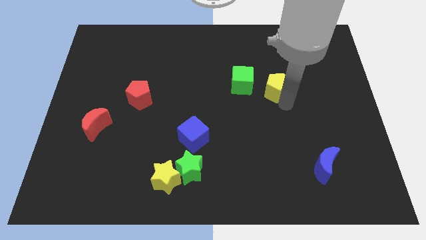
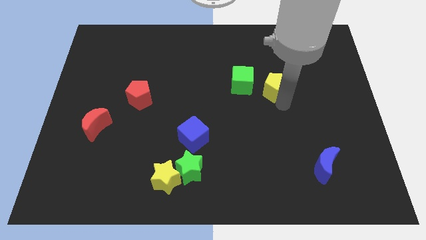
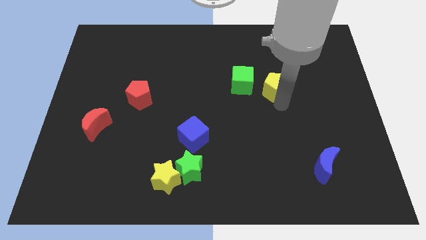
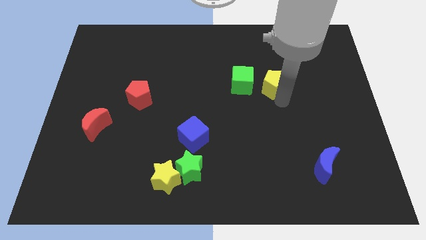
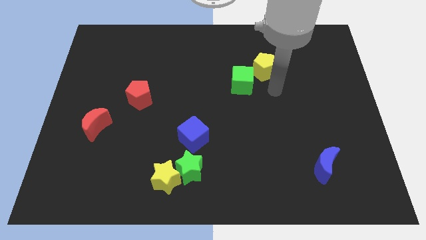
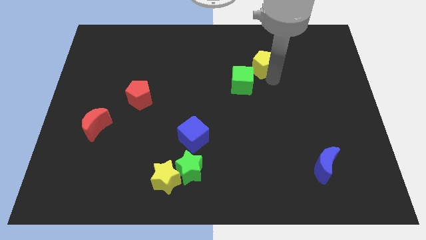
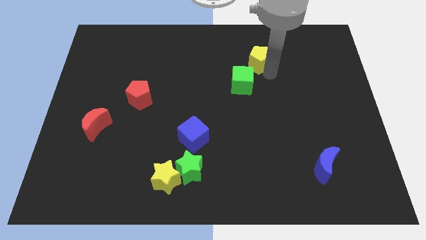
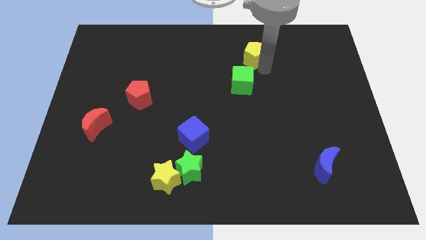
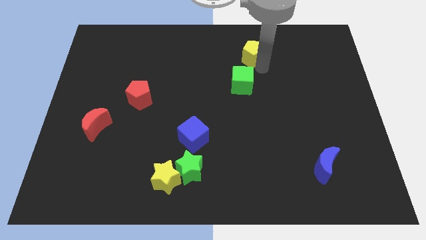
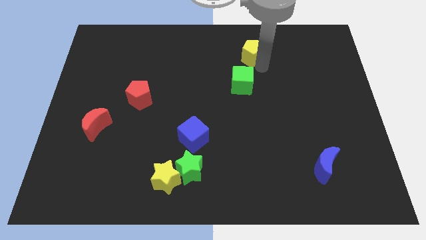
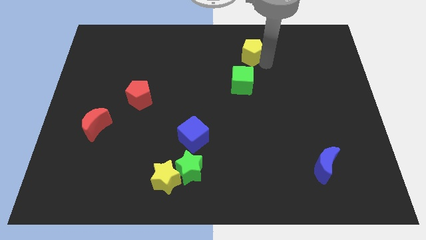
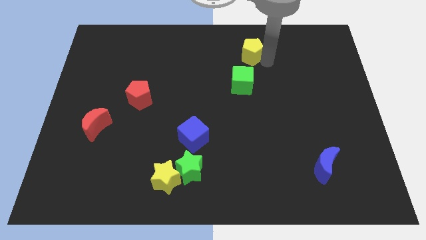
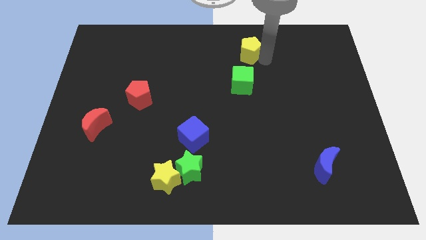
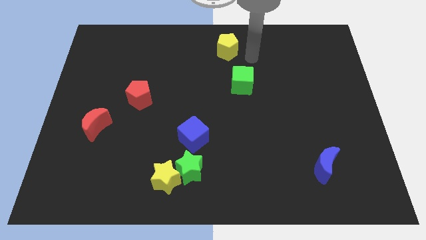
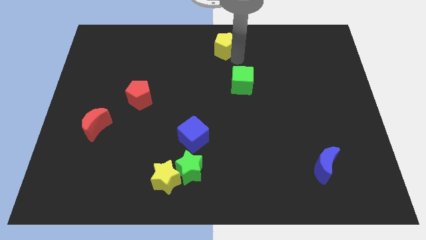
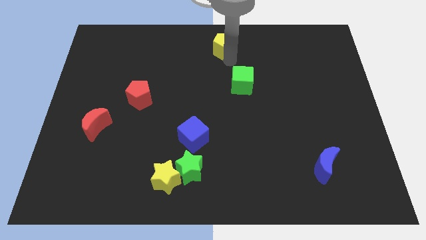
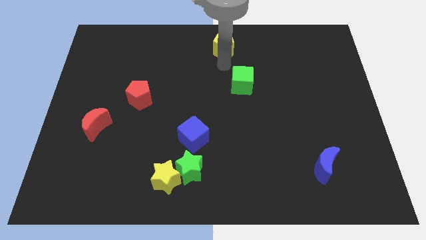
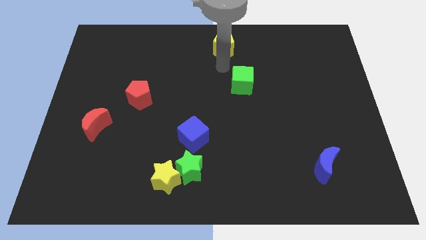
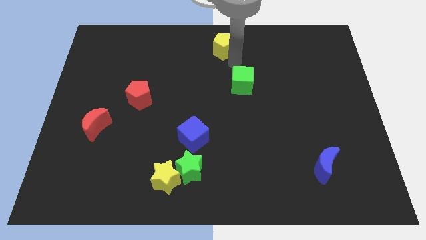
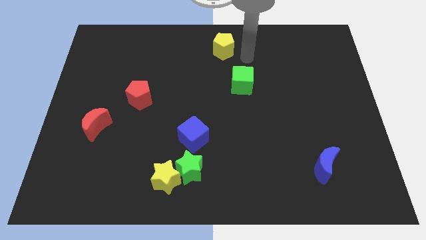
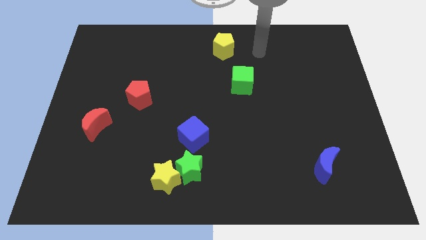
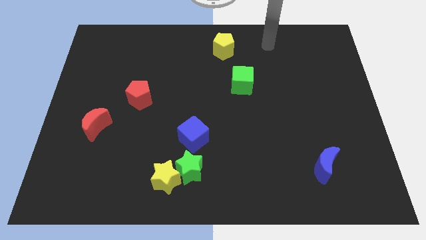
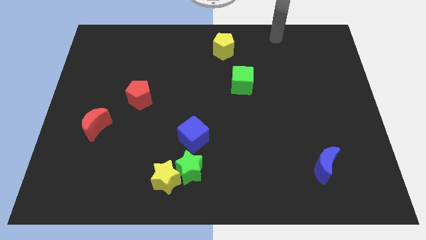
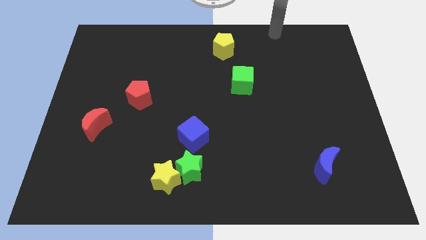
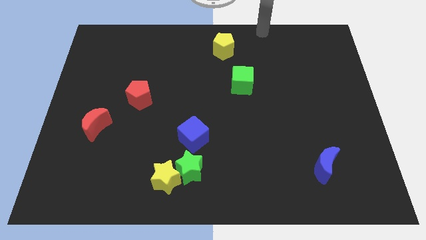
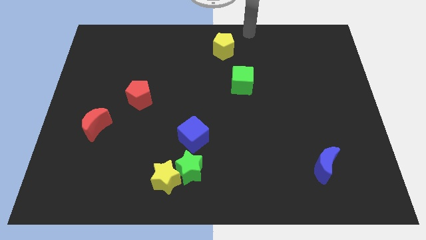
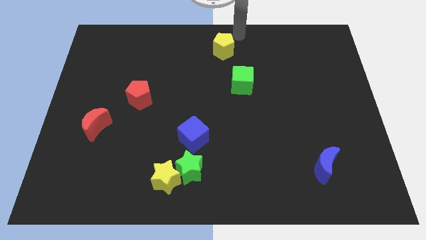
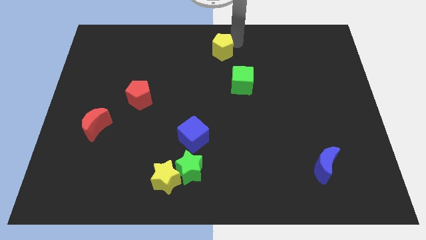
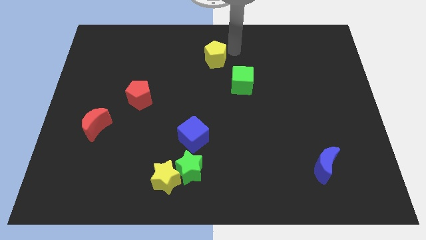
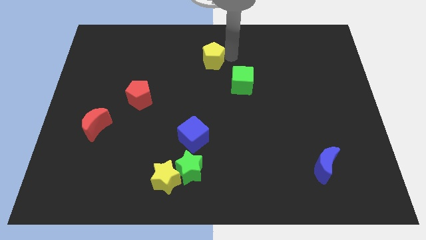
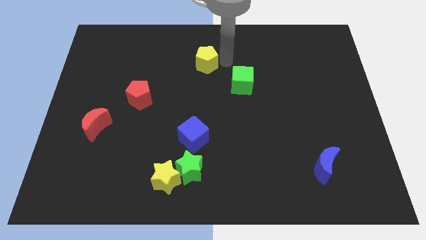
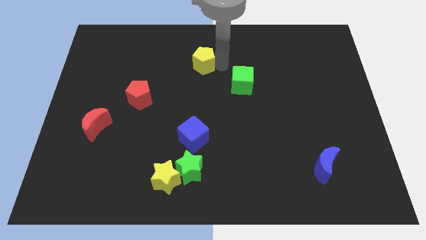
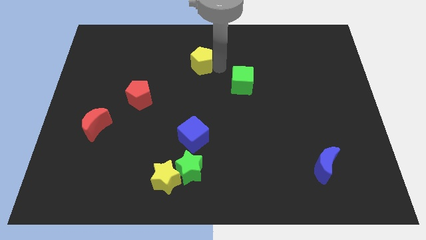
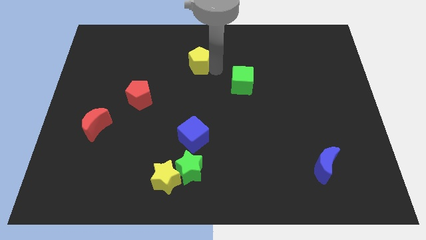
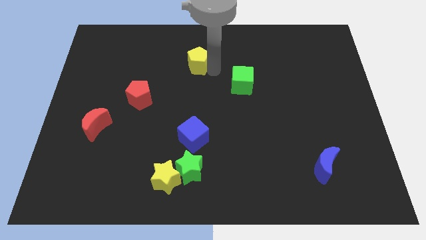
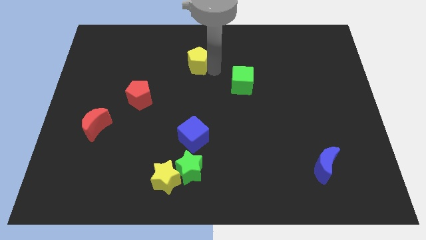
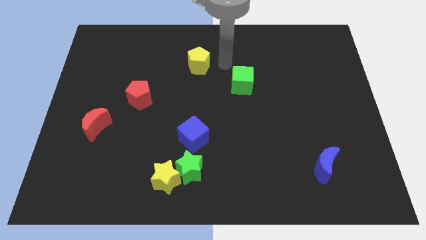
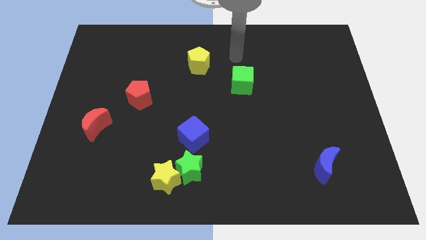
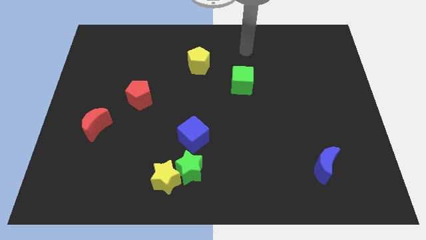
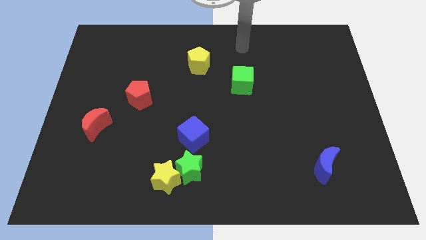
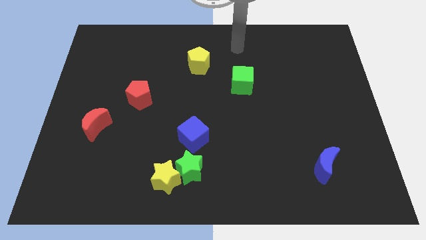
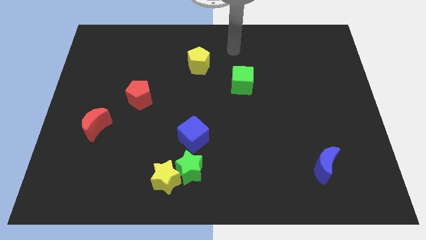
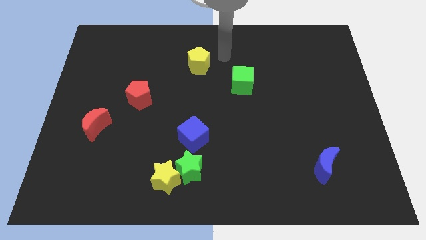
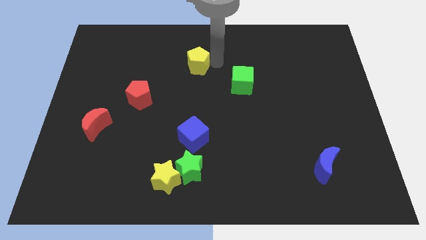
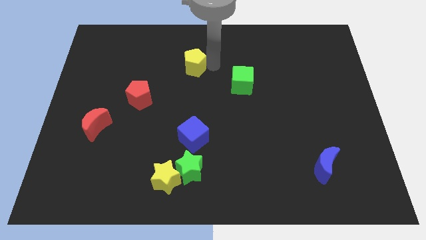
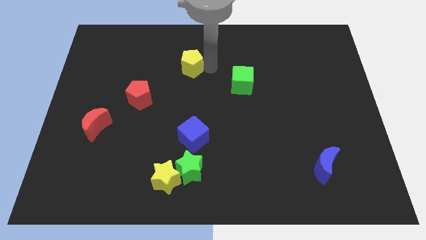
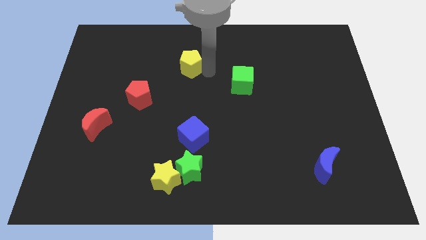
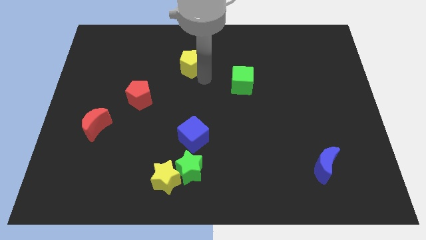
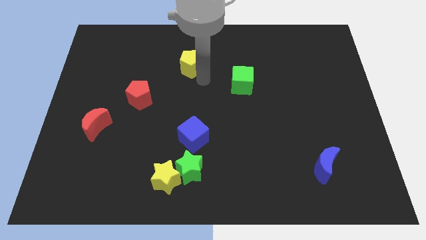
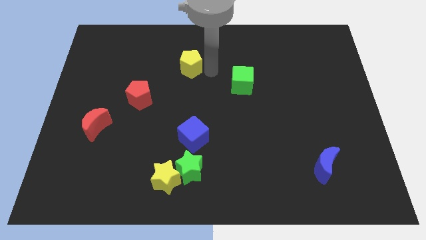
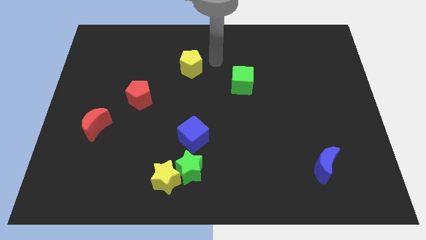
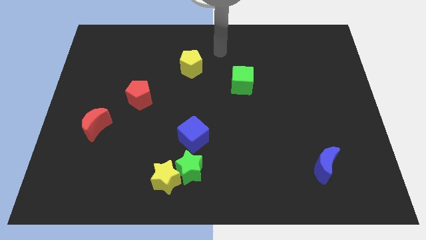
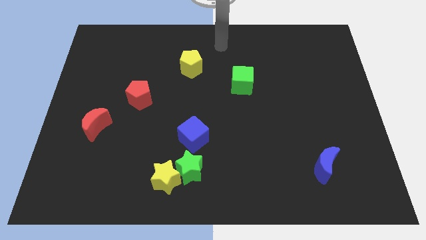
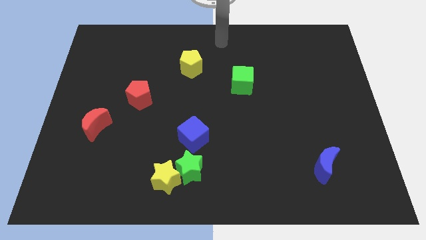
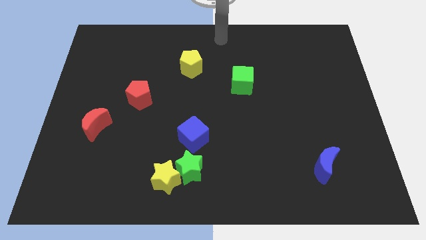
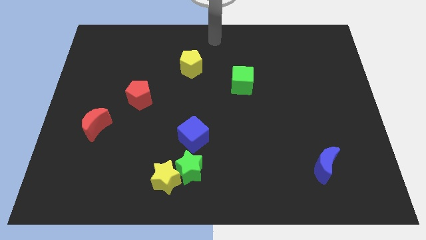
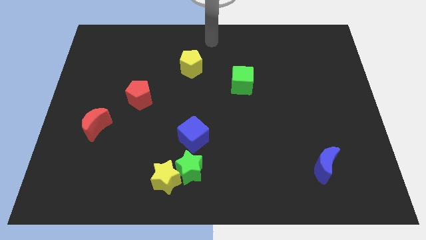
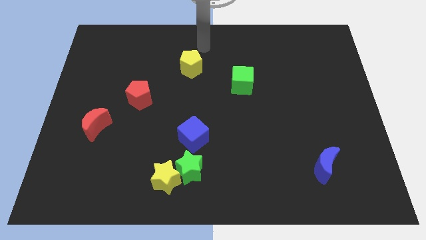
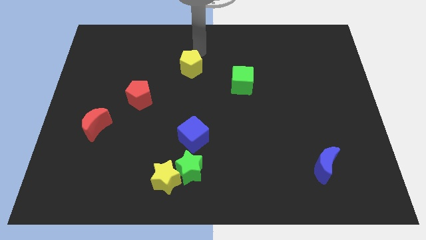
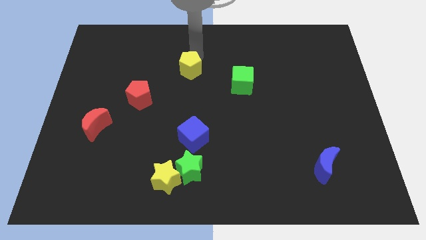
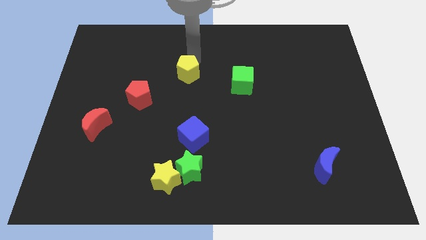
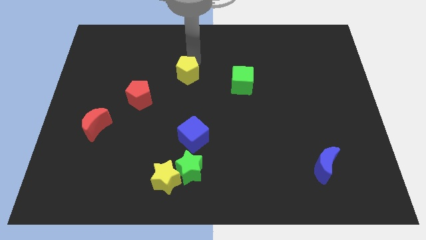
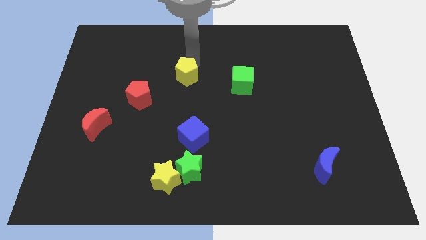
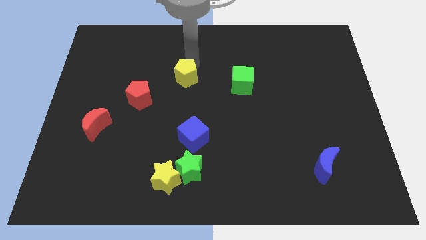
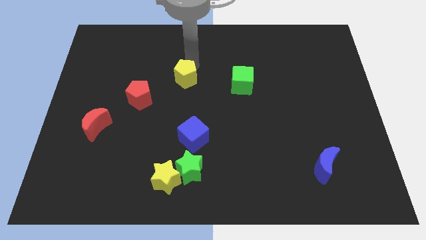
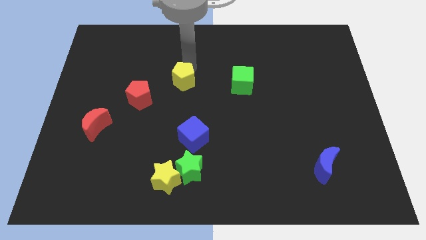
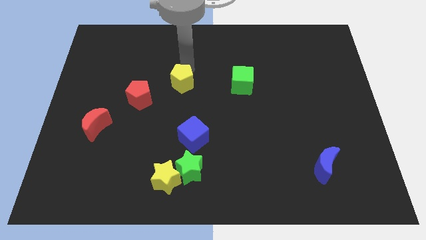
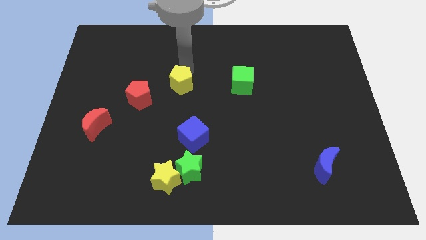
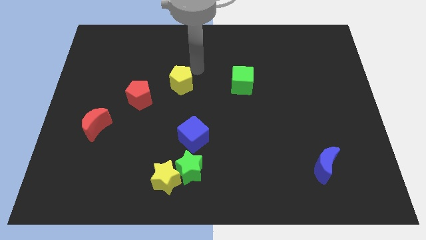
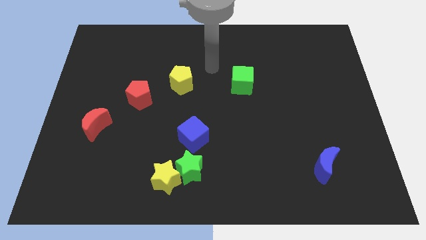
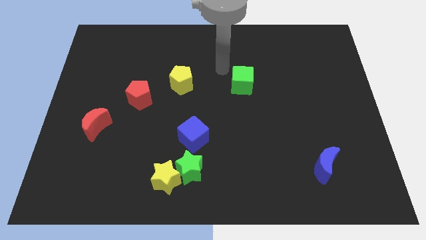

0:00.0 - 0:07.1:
place yellow pentagon to left of green cube

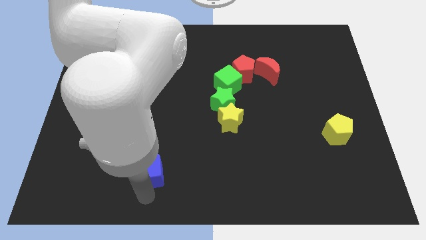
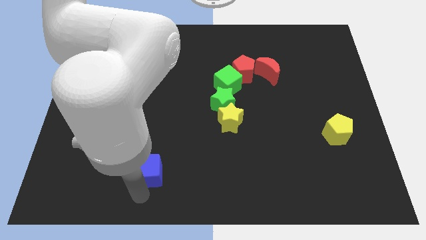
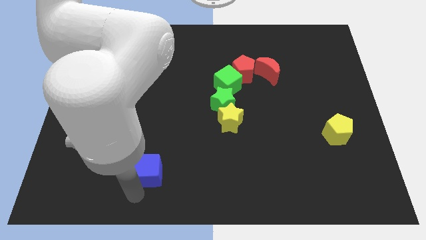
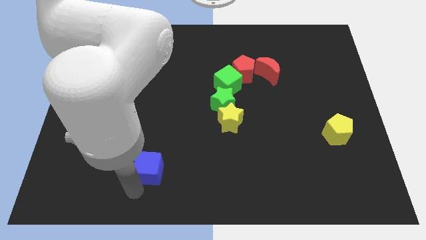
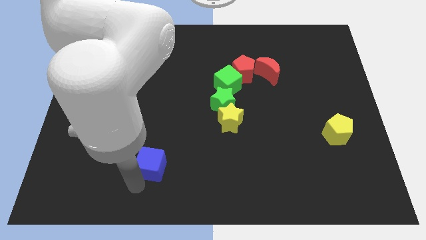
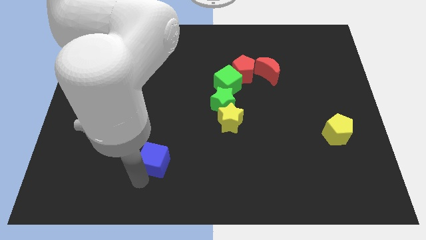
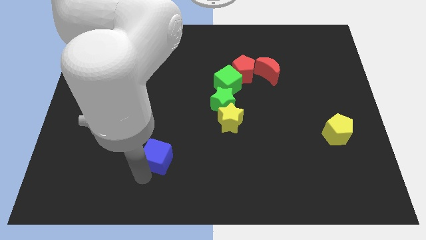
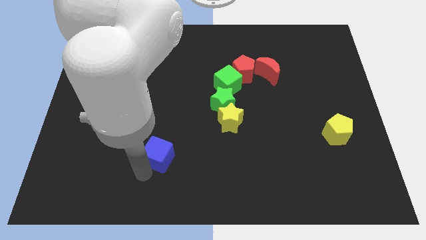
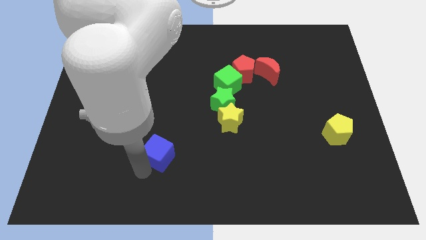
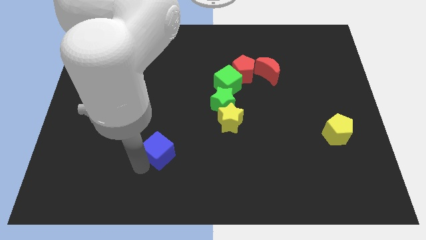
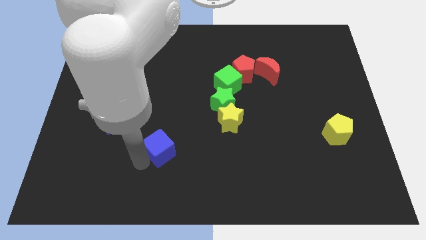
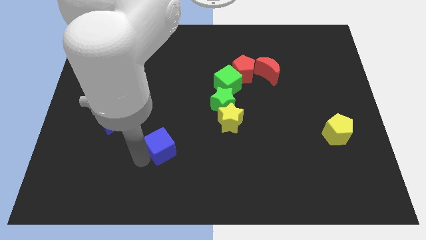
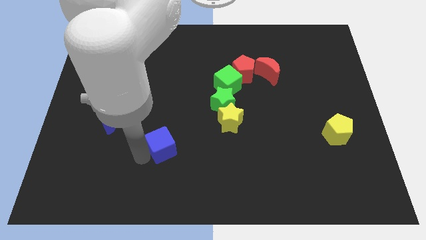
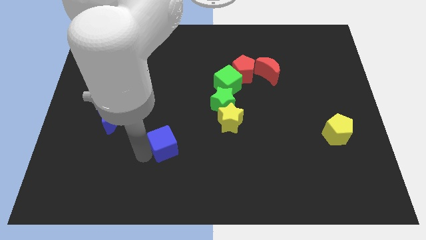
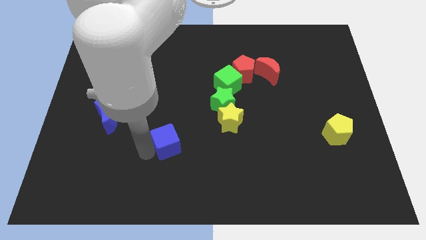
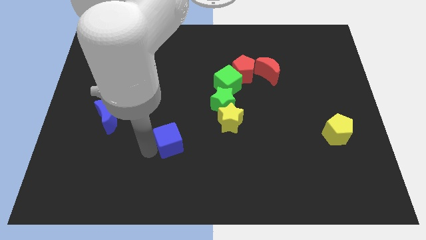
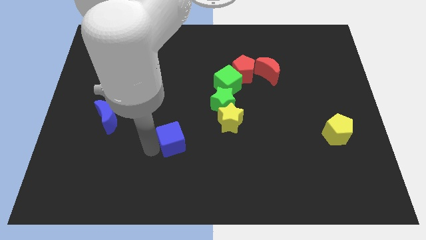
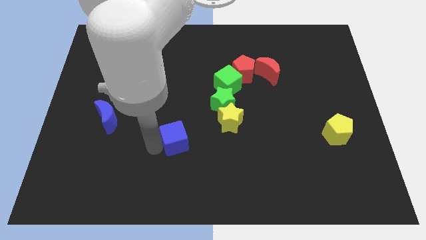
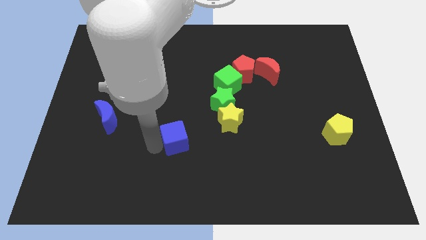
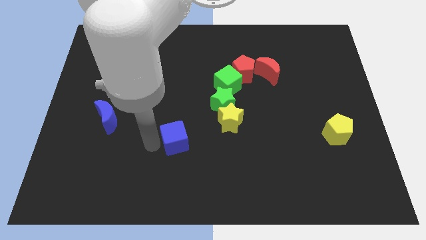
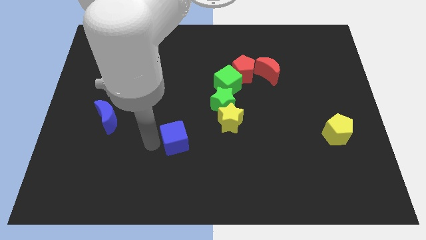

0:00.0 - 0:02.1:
push the blue cube towards the yellow star
